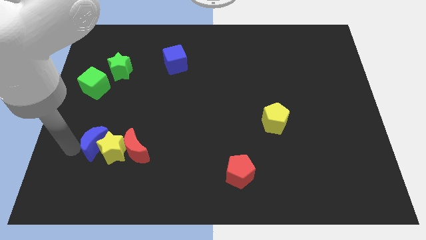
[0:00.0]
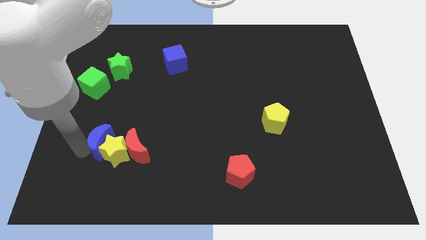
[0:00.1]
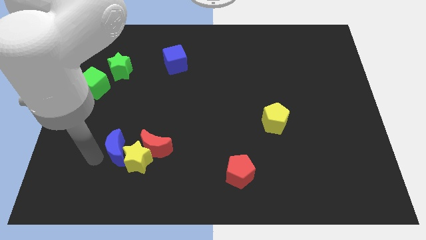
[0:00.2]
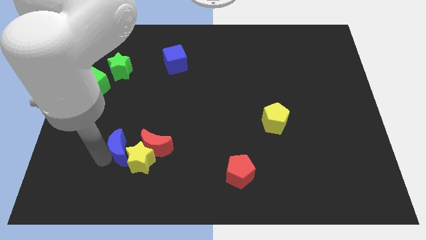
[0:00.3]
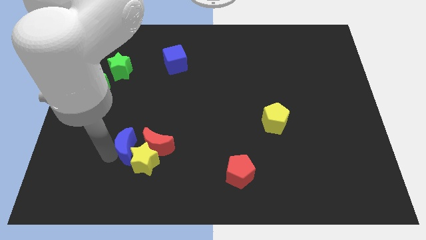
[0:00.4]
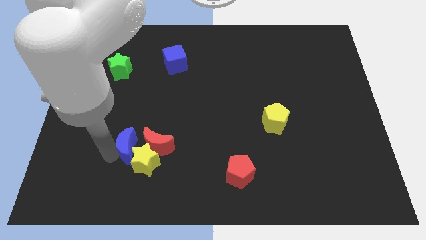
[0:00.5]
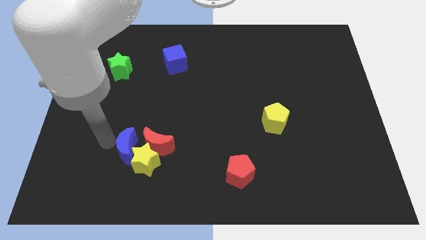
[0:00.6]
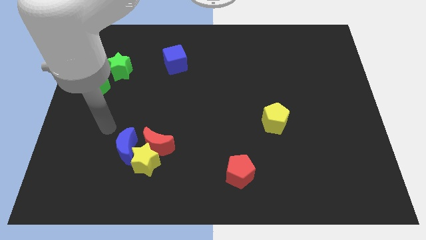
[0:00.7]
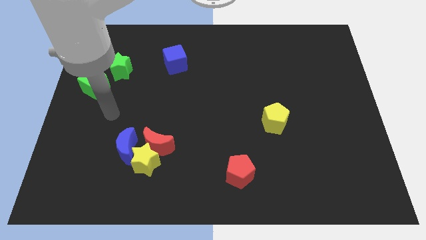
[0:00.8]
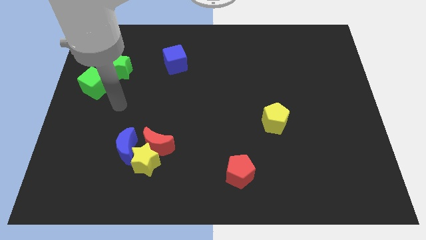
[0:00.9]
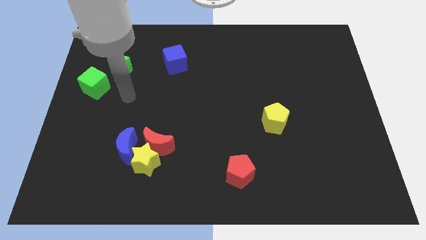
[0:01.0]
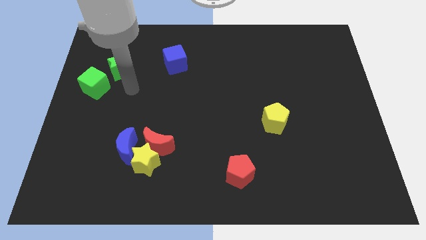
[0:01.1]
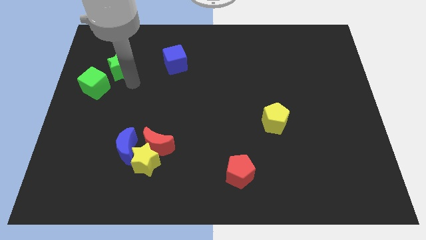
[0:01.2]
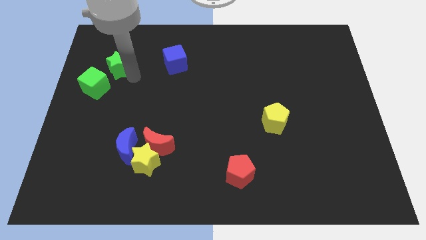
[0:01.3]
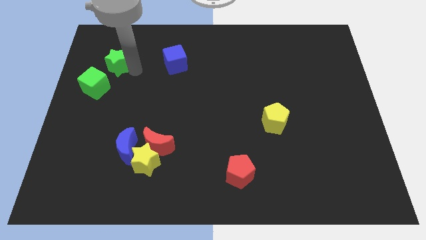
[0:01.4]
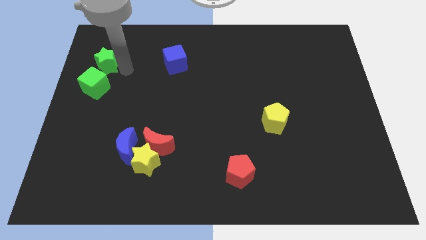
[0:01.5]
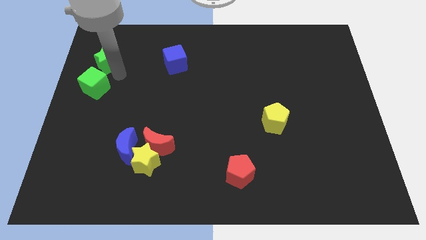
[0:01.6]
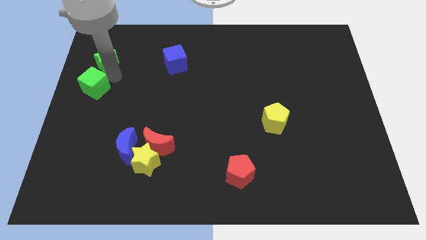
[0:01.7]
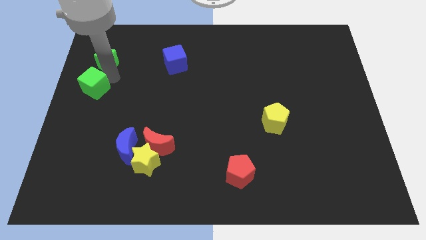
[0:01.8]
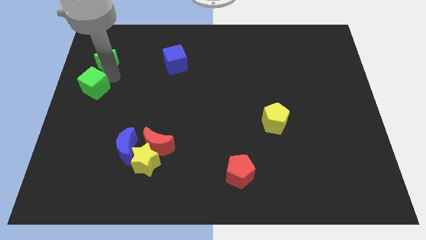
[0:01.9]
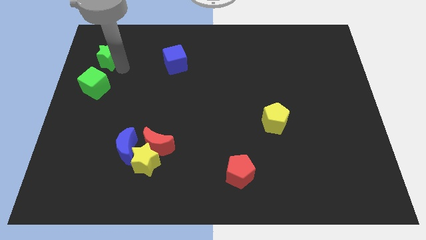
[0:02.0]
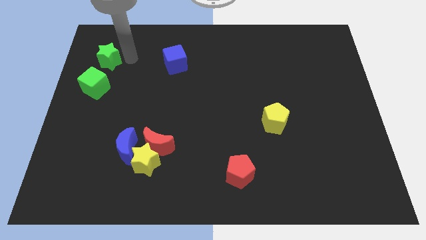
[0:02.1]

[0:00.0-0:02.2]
place the arm at the bottom left of the green star

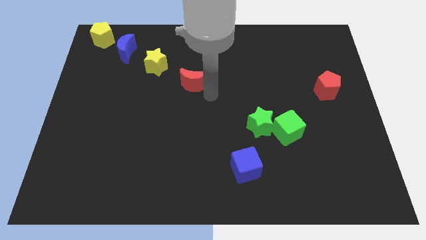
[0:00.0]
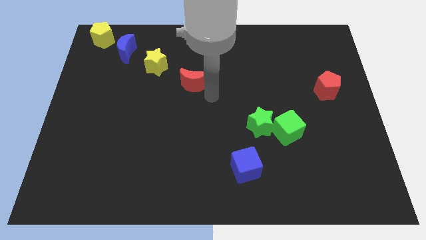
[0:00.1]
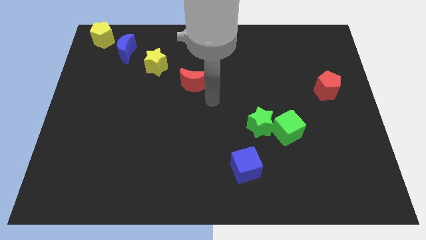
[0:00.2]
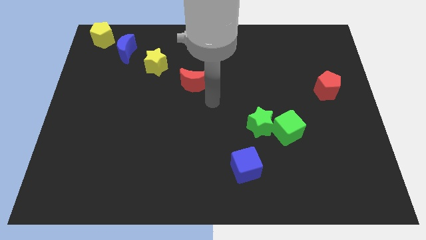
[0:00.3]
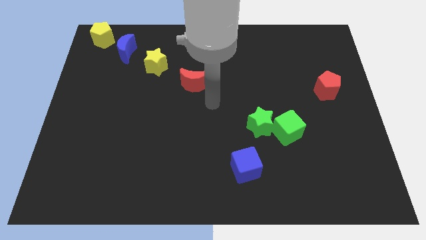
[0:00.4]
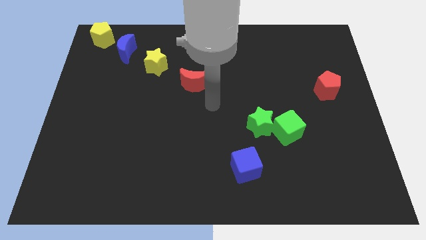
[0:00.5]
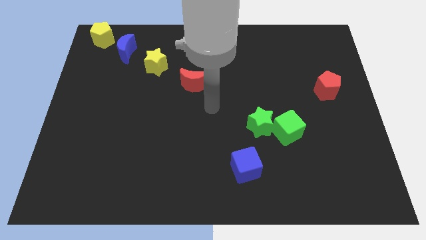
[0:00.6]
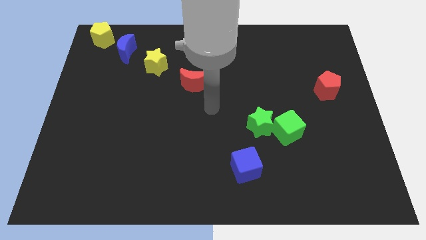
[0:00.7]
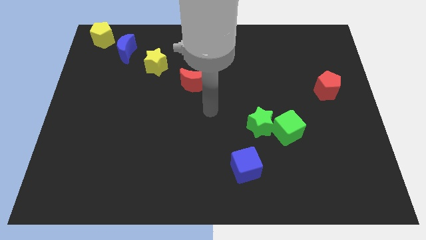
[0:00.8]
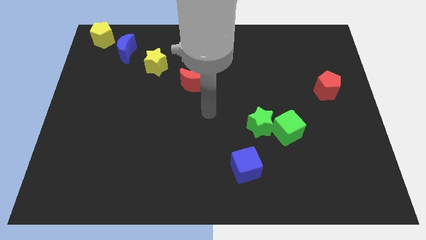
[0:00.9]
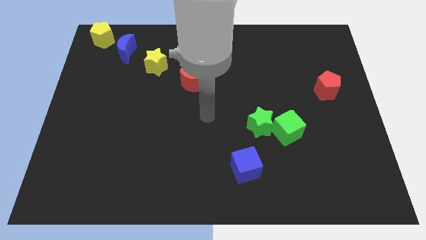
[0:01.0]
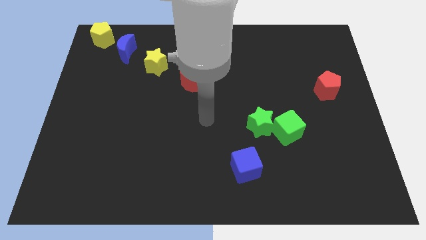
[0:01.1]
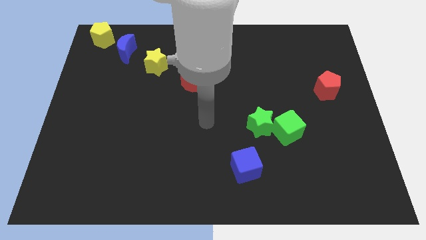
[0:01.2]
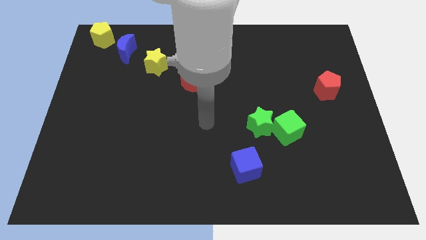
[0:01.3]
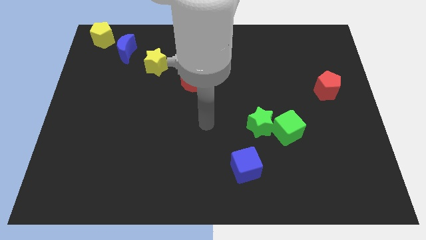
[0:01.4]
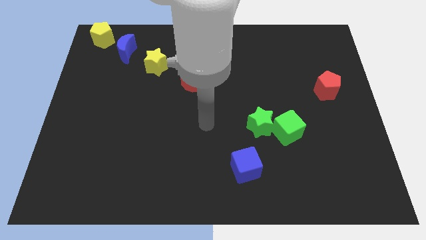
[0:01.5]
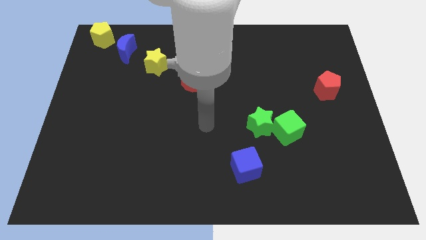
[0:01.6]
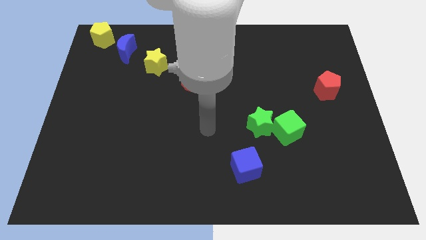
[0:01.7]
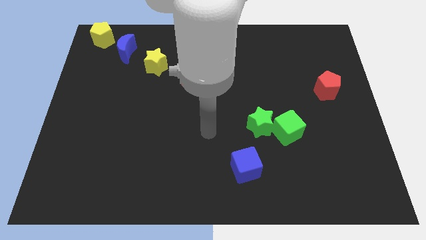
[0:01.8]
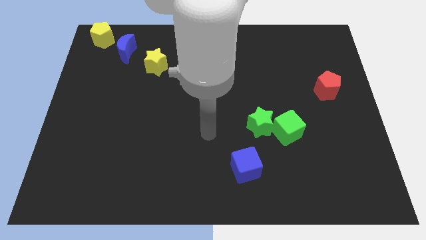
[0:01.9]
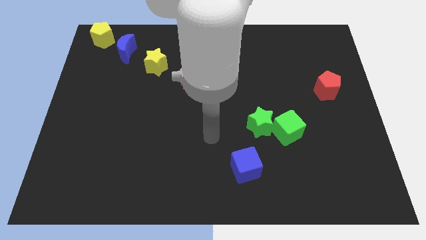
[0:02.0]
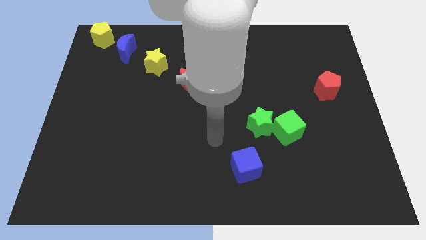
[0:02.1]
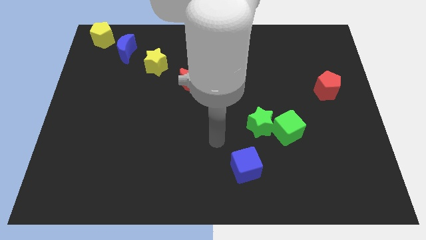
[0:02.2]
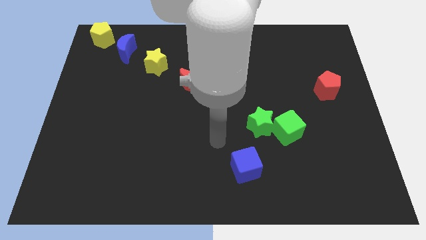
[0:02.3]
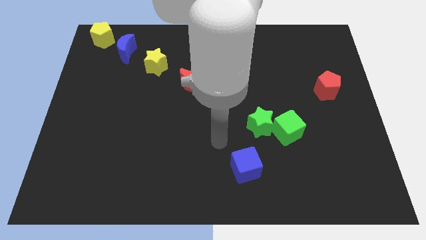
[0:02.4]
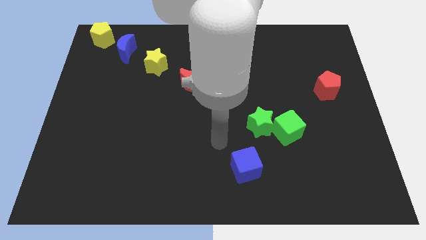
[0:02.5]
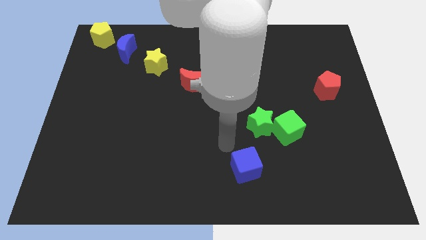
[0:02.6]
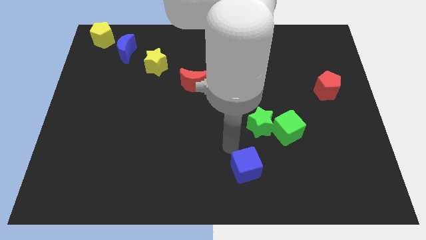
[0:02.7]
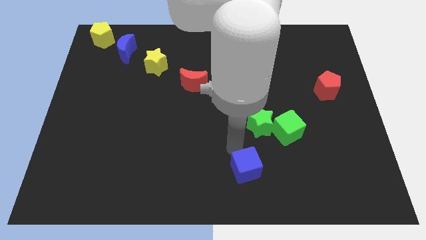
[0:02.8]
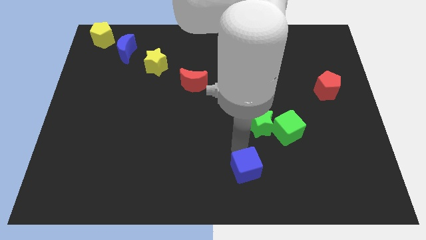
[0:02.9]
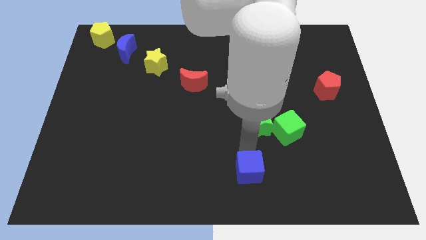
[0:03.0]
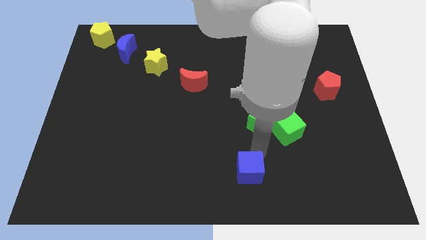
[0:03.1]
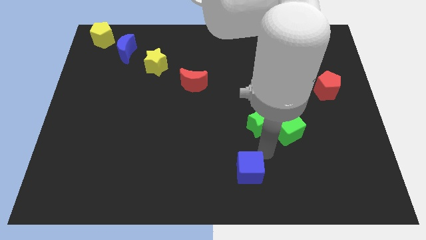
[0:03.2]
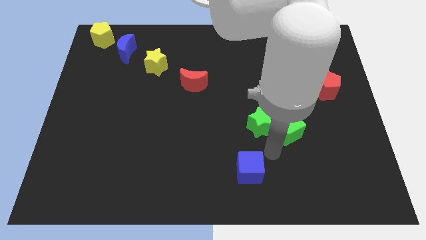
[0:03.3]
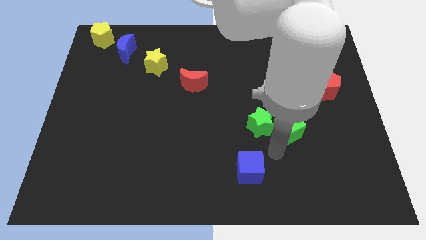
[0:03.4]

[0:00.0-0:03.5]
slightly touch down the blue cube

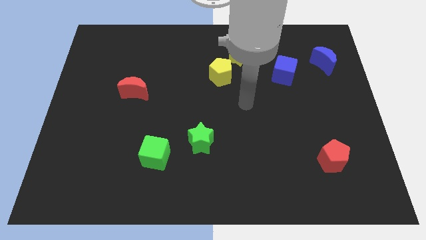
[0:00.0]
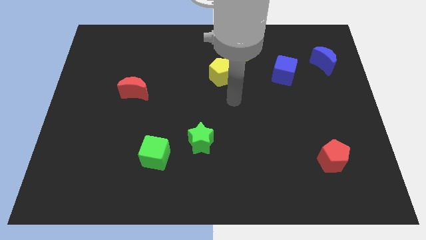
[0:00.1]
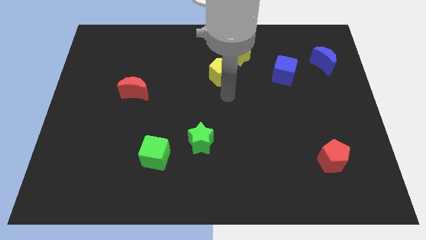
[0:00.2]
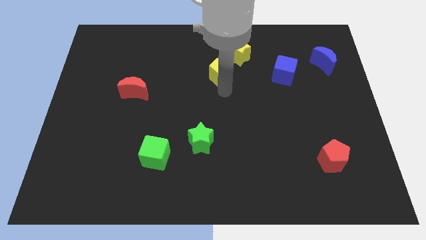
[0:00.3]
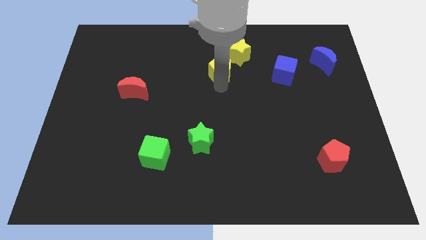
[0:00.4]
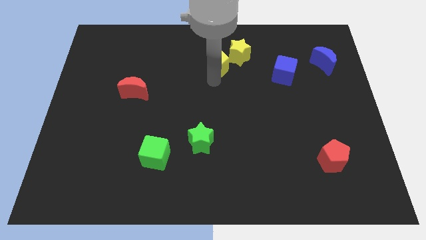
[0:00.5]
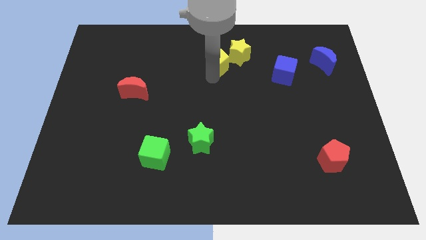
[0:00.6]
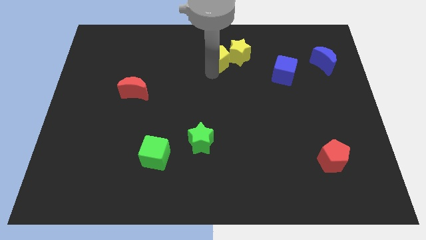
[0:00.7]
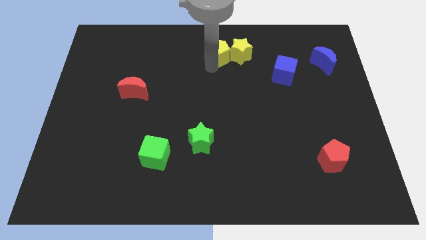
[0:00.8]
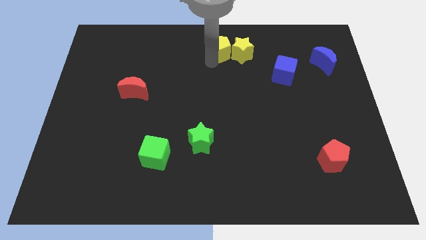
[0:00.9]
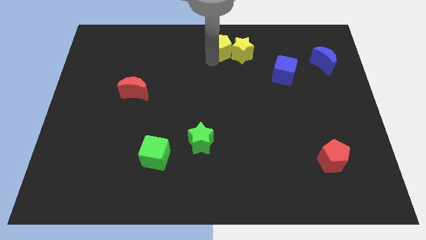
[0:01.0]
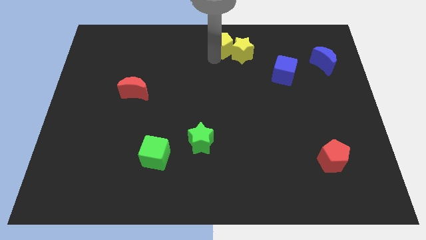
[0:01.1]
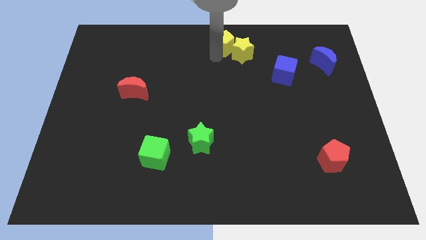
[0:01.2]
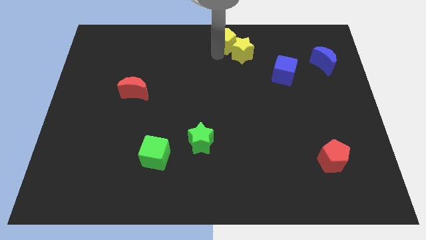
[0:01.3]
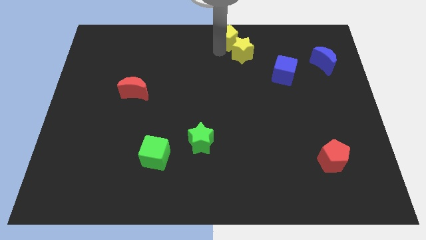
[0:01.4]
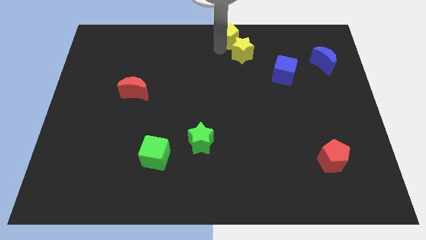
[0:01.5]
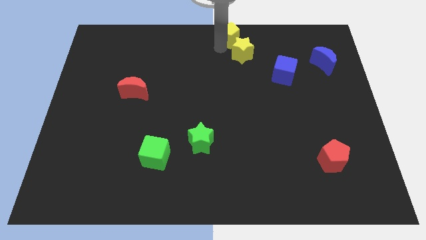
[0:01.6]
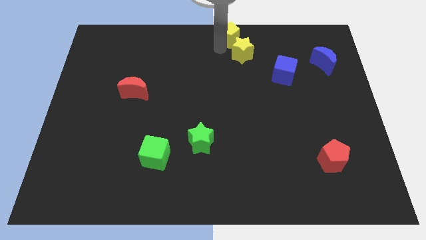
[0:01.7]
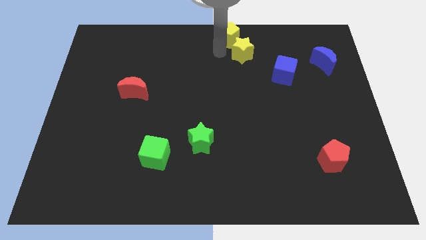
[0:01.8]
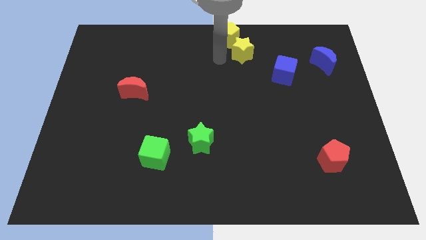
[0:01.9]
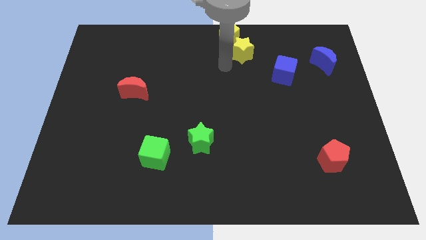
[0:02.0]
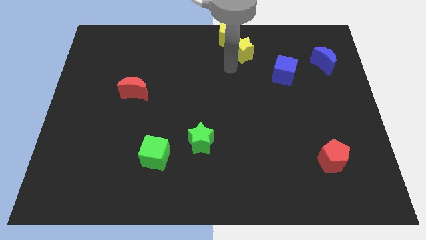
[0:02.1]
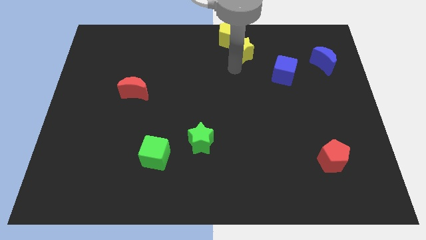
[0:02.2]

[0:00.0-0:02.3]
move yellow pentagon to the top center

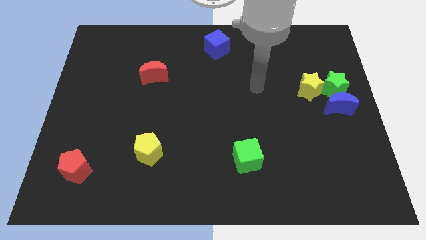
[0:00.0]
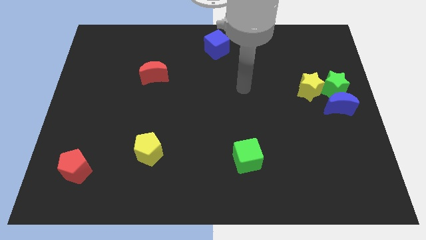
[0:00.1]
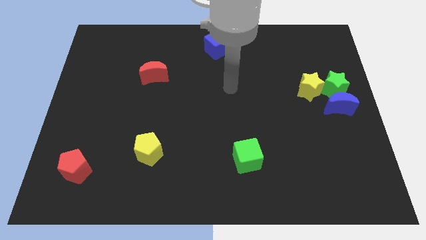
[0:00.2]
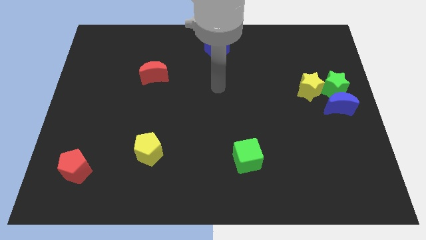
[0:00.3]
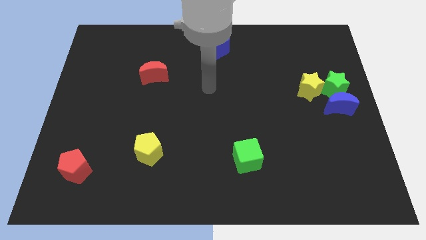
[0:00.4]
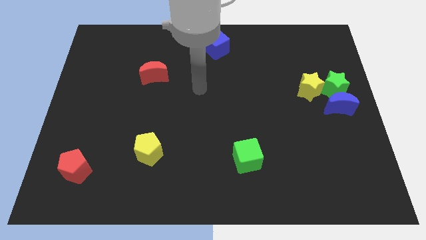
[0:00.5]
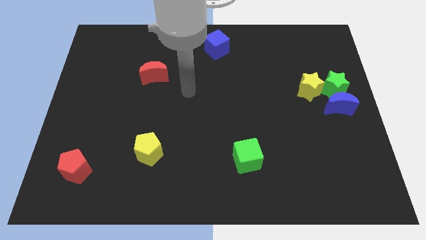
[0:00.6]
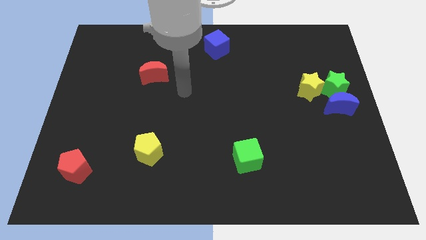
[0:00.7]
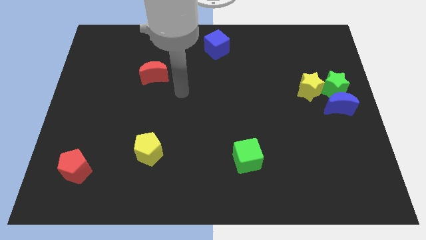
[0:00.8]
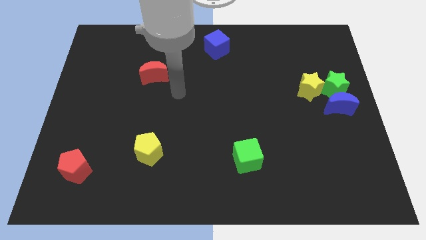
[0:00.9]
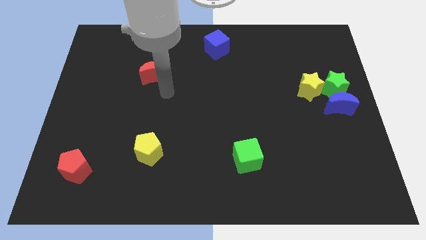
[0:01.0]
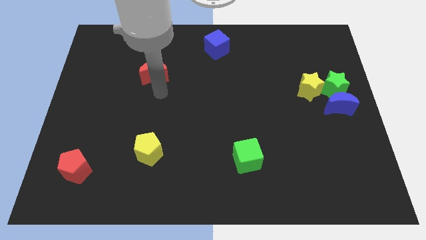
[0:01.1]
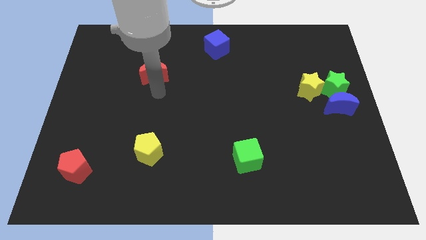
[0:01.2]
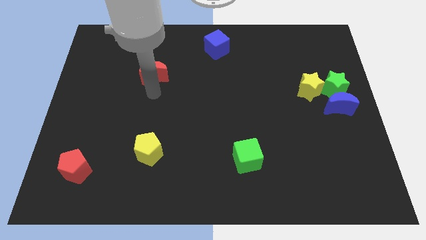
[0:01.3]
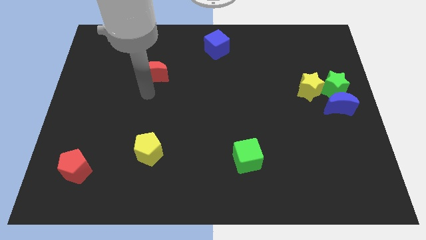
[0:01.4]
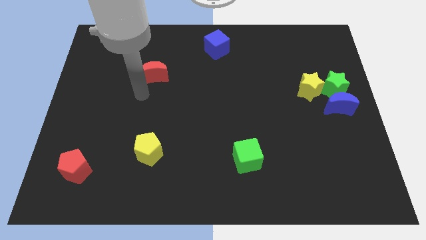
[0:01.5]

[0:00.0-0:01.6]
place the arm below the red moon
